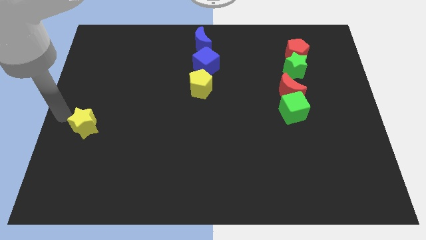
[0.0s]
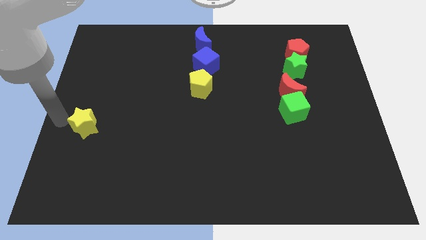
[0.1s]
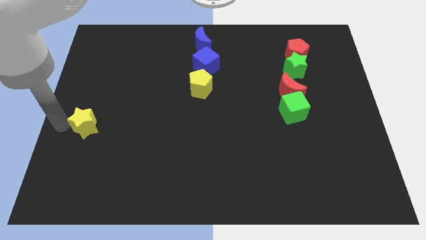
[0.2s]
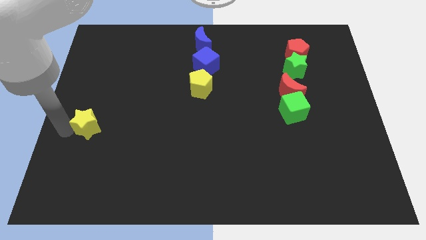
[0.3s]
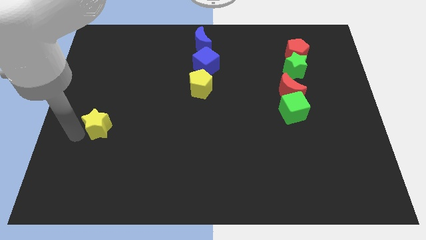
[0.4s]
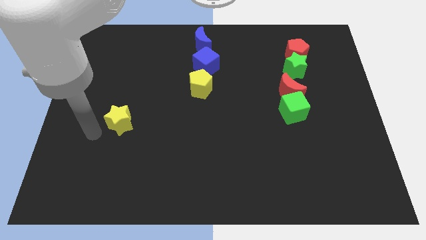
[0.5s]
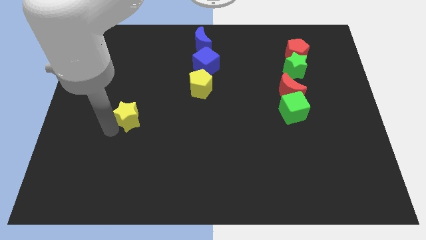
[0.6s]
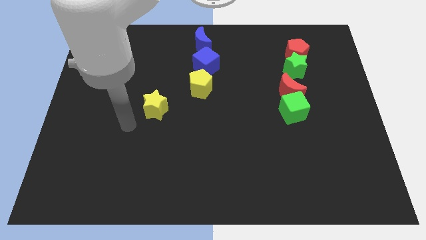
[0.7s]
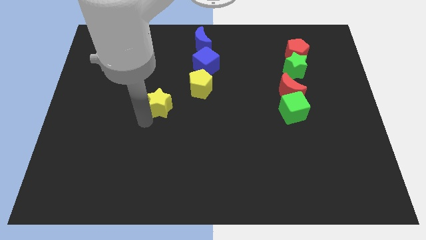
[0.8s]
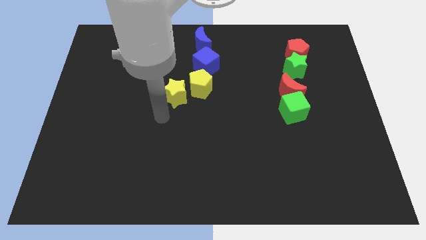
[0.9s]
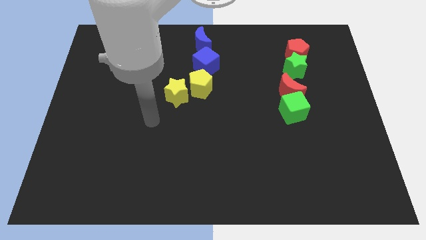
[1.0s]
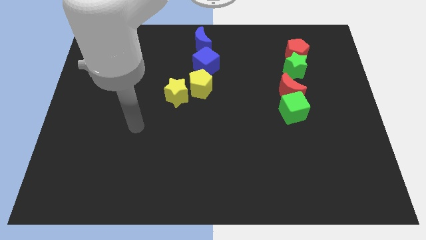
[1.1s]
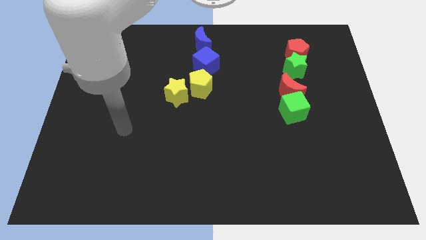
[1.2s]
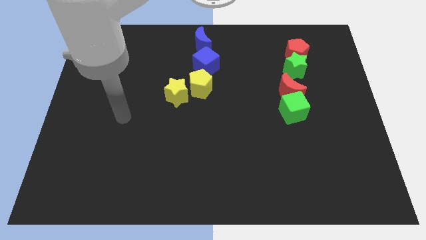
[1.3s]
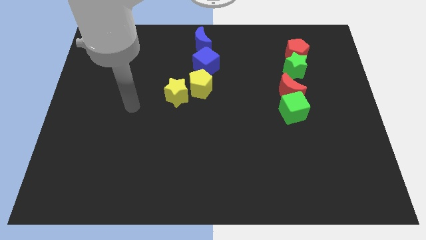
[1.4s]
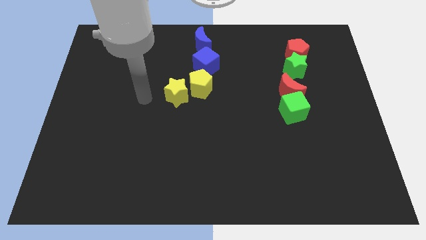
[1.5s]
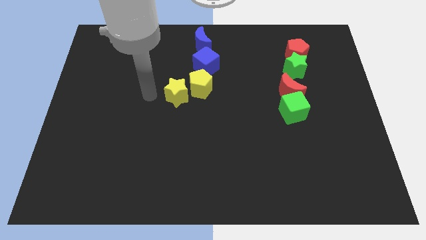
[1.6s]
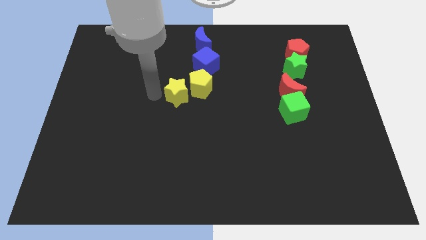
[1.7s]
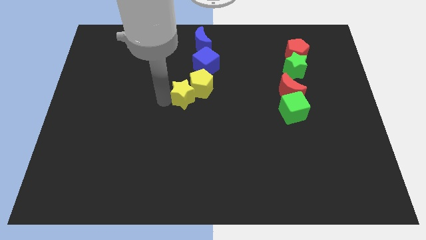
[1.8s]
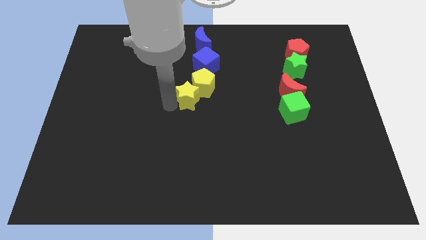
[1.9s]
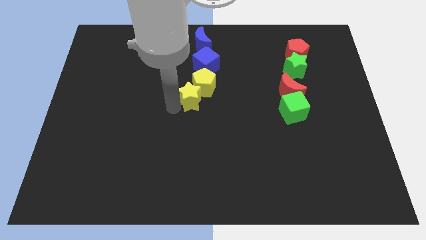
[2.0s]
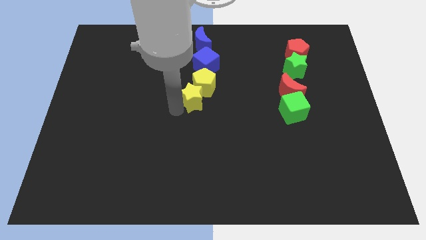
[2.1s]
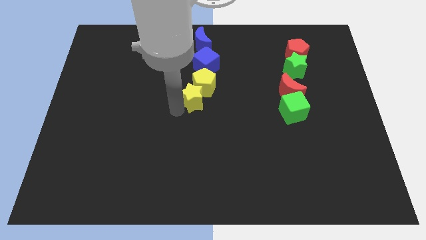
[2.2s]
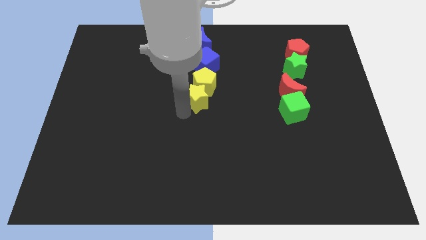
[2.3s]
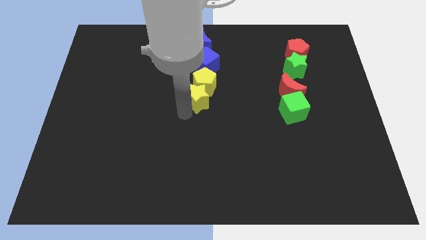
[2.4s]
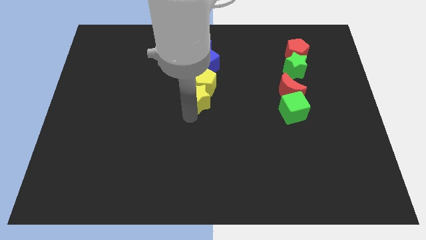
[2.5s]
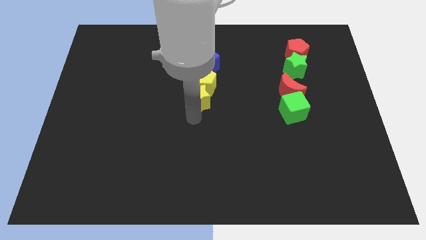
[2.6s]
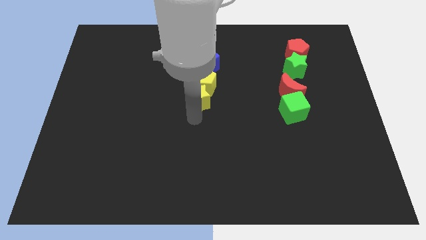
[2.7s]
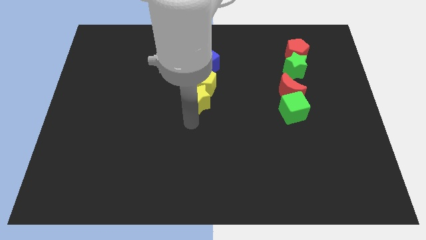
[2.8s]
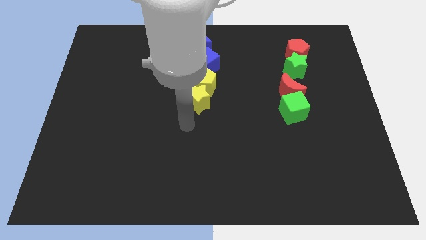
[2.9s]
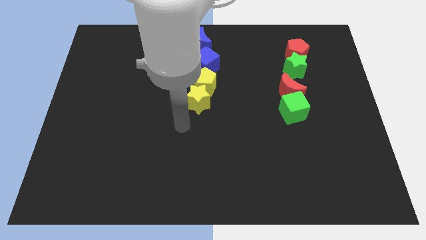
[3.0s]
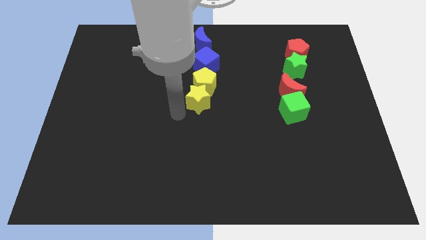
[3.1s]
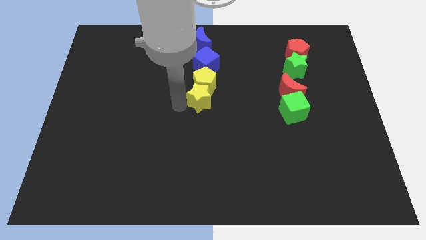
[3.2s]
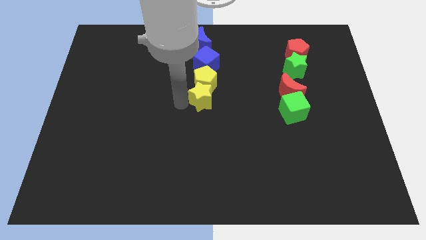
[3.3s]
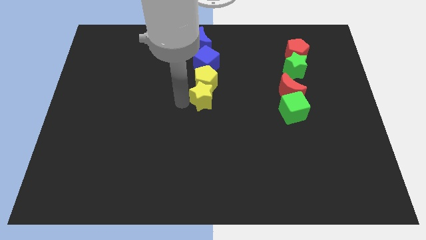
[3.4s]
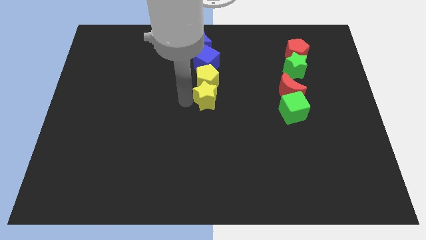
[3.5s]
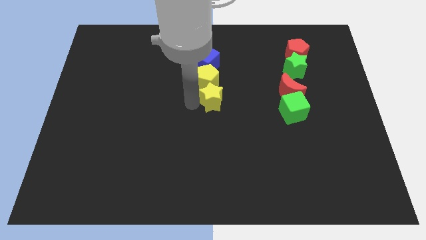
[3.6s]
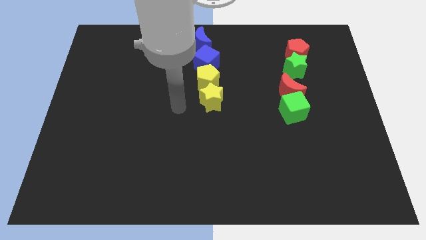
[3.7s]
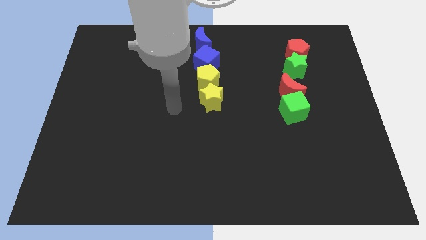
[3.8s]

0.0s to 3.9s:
move the yellow star to the center of the board

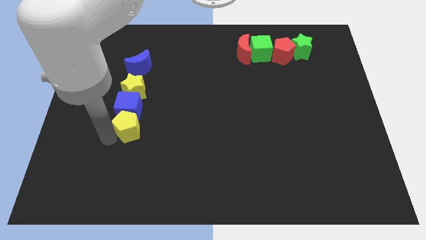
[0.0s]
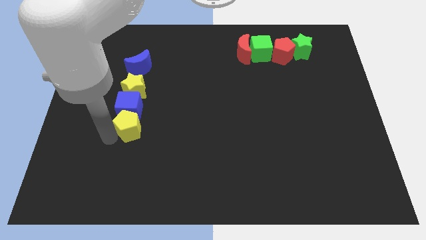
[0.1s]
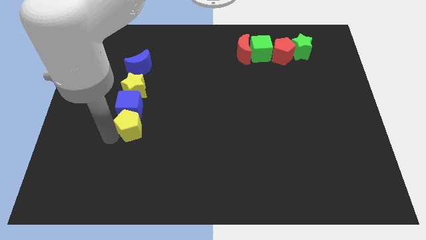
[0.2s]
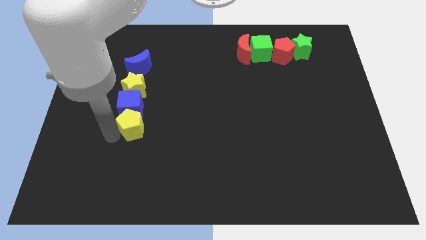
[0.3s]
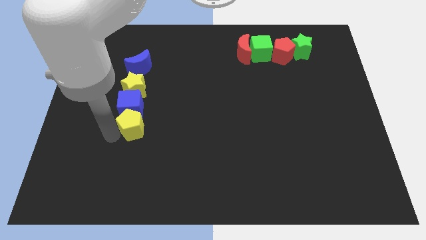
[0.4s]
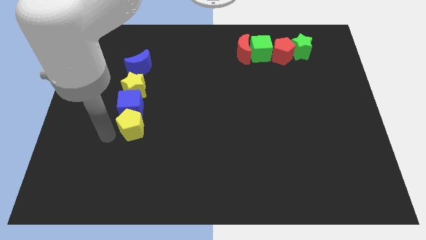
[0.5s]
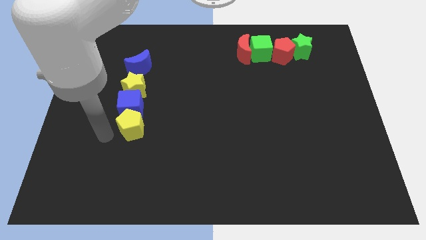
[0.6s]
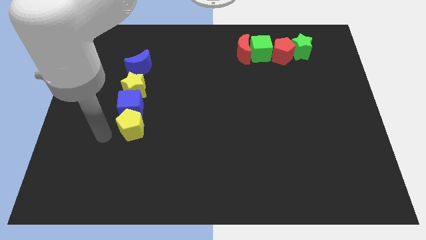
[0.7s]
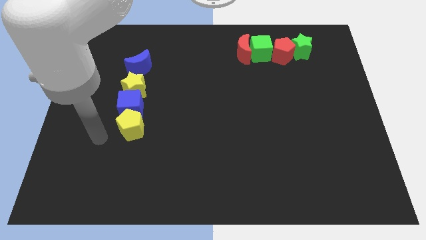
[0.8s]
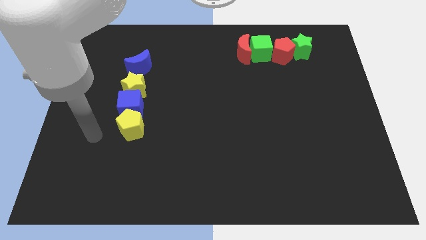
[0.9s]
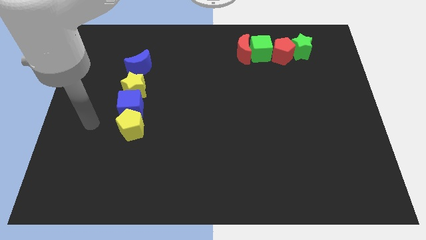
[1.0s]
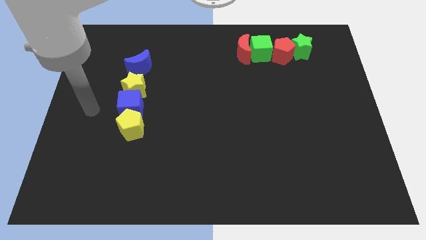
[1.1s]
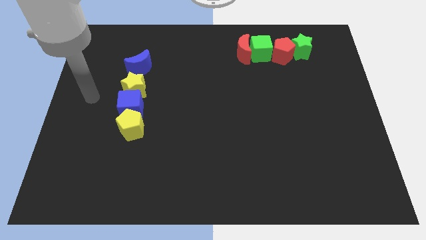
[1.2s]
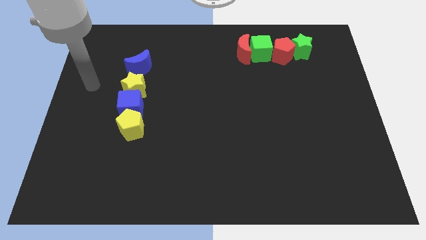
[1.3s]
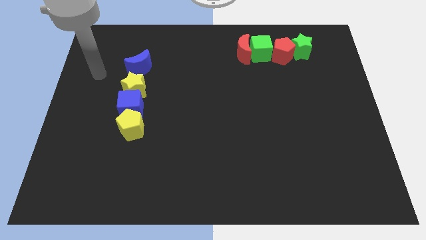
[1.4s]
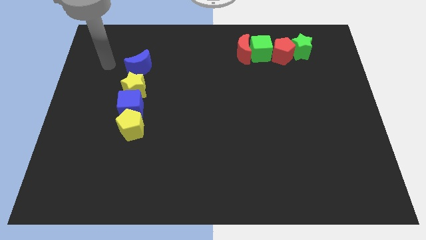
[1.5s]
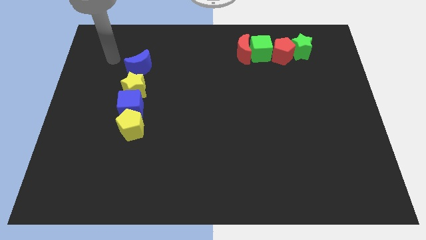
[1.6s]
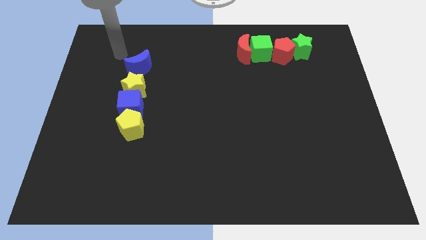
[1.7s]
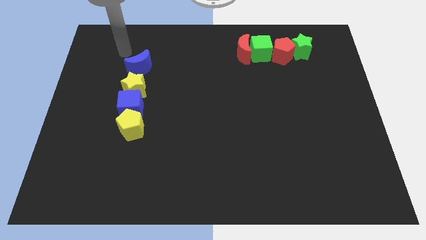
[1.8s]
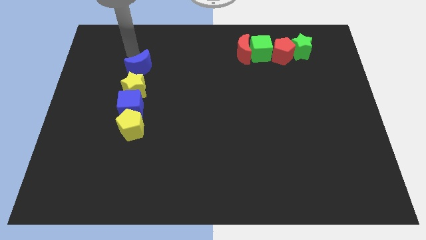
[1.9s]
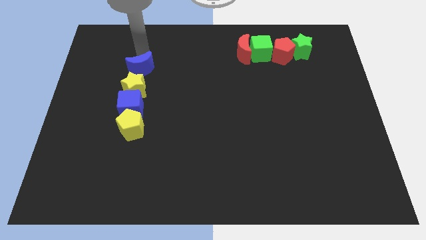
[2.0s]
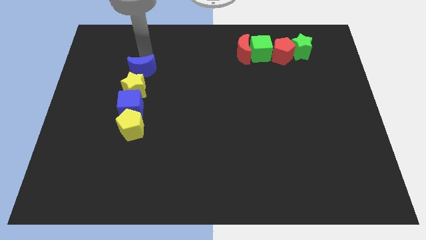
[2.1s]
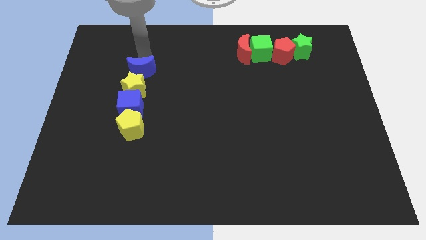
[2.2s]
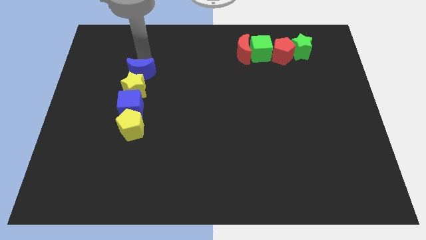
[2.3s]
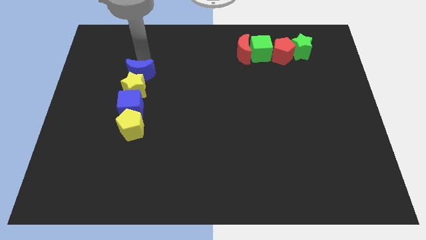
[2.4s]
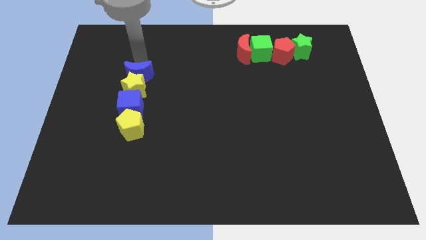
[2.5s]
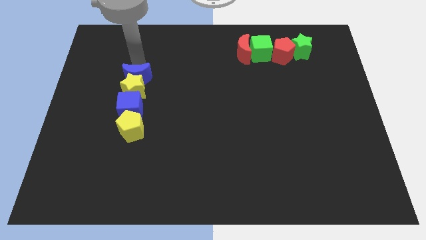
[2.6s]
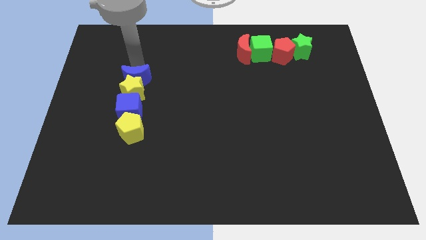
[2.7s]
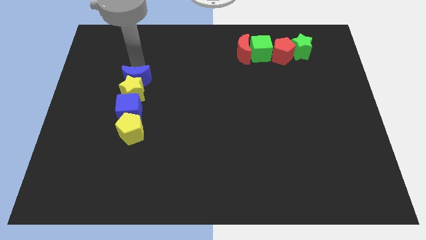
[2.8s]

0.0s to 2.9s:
place the arm above the blue moon

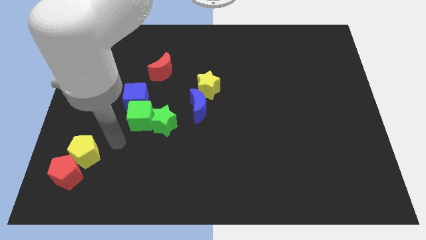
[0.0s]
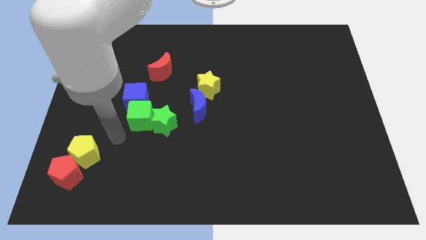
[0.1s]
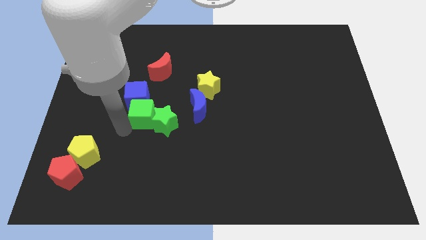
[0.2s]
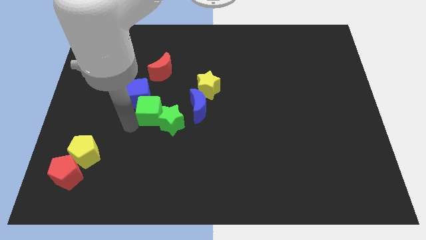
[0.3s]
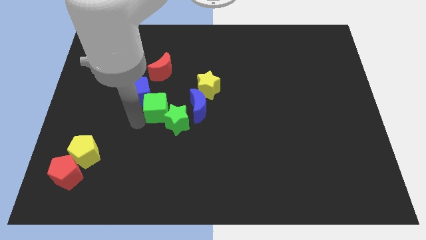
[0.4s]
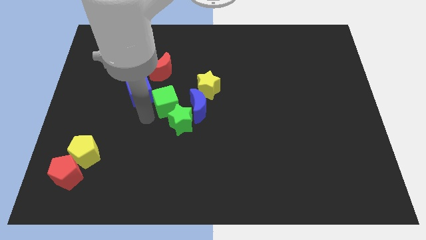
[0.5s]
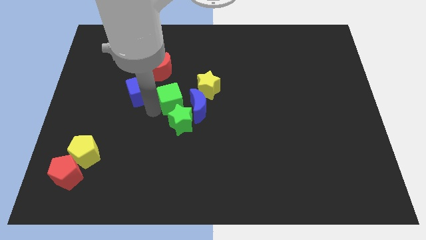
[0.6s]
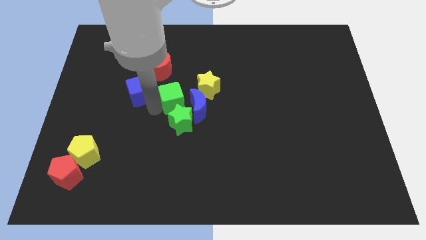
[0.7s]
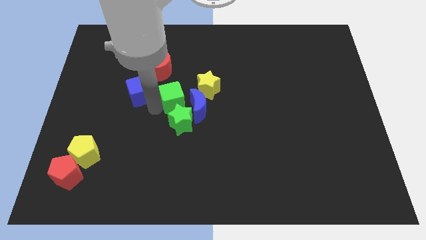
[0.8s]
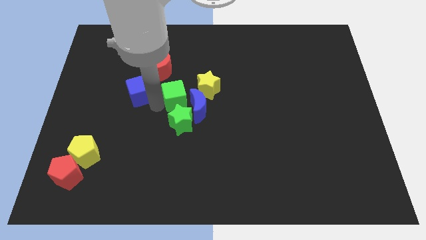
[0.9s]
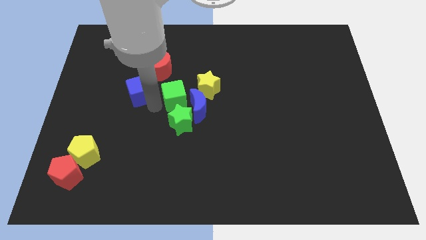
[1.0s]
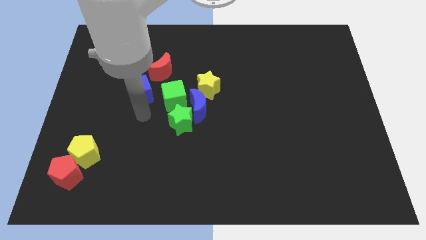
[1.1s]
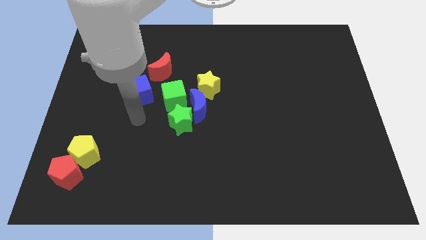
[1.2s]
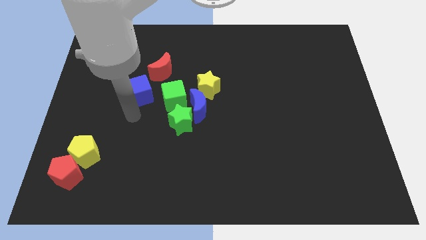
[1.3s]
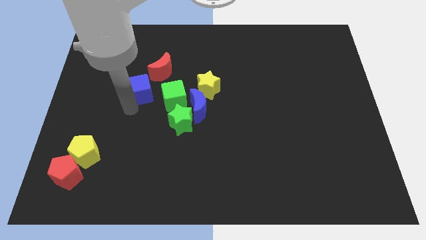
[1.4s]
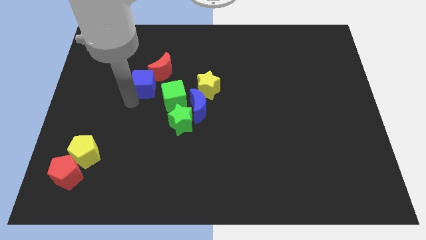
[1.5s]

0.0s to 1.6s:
slide green cube close to the blue moon

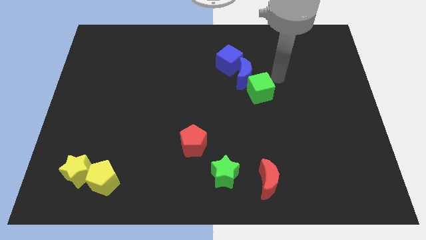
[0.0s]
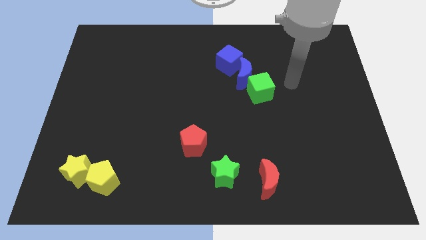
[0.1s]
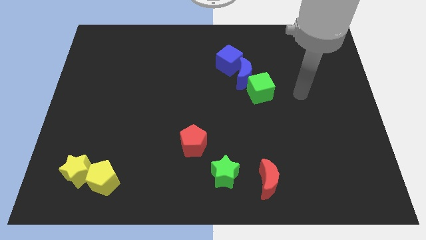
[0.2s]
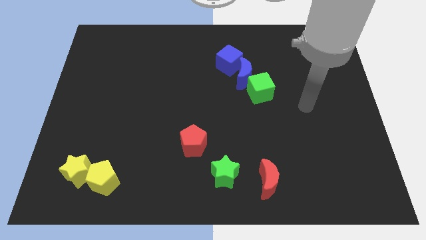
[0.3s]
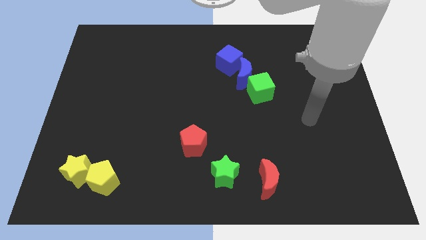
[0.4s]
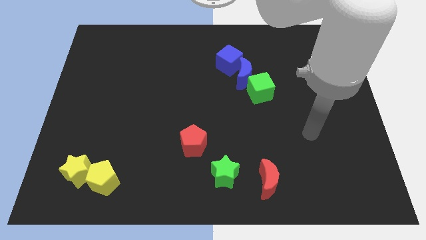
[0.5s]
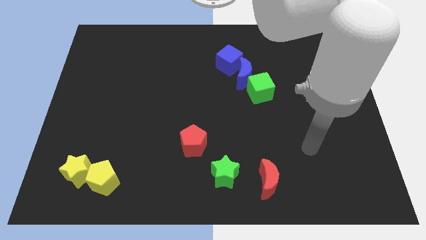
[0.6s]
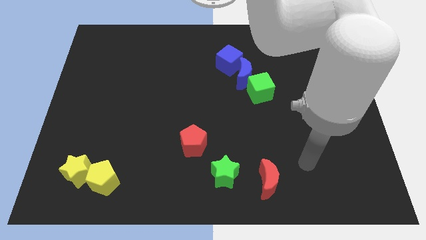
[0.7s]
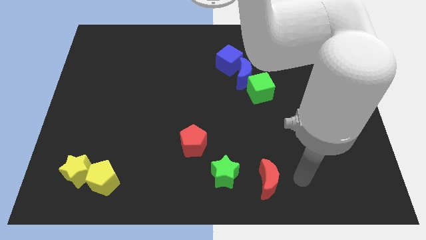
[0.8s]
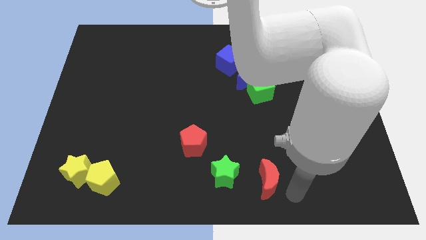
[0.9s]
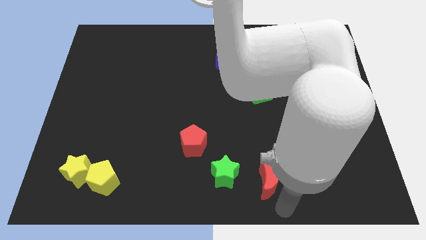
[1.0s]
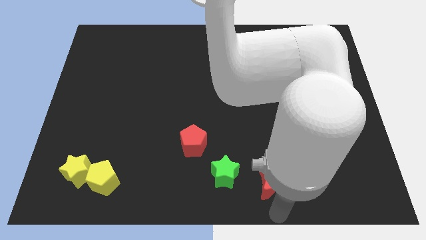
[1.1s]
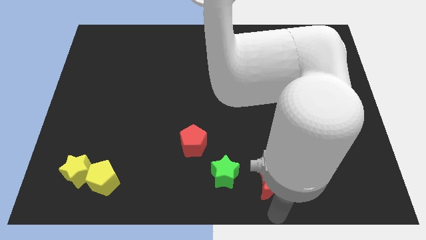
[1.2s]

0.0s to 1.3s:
move your arm towards the bottom of the red crescent
